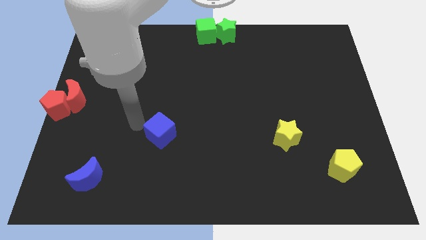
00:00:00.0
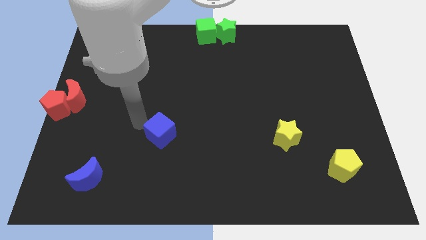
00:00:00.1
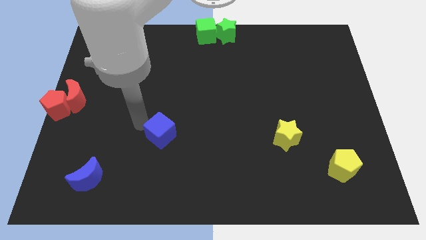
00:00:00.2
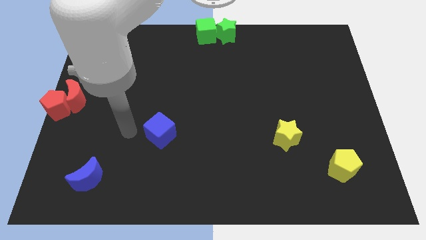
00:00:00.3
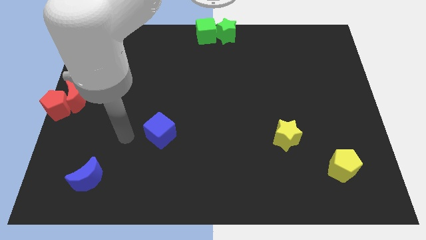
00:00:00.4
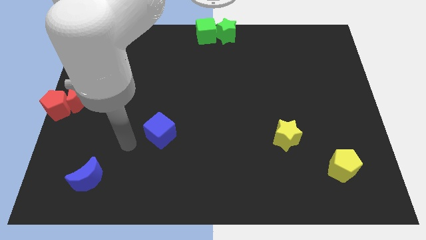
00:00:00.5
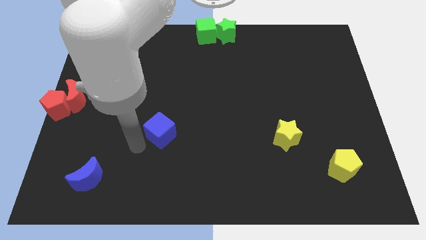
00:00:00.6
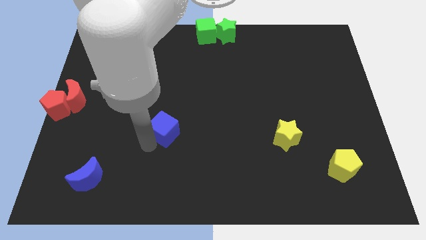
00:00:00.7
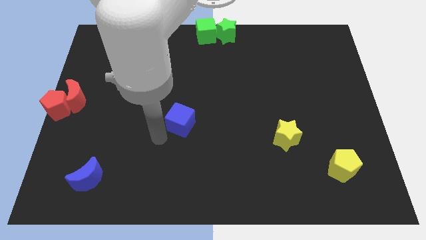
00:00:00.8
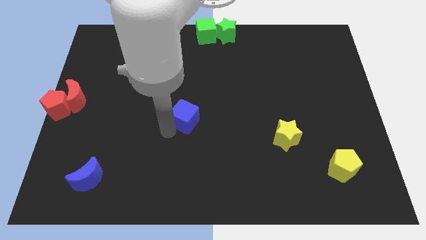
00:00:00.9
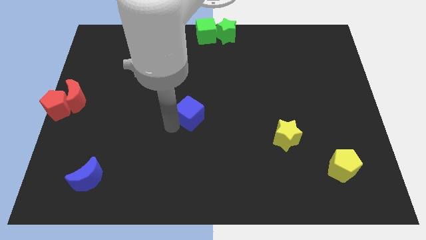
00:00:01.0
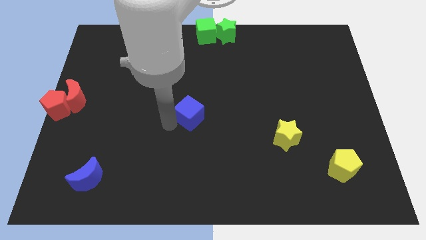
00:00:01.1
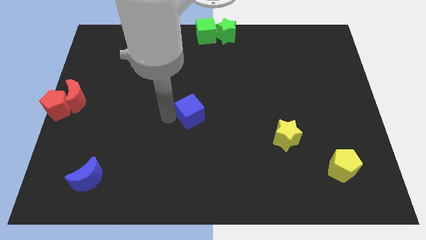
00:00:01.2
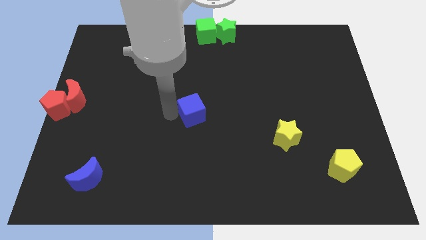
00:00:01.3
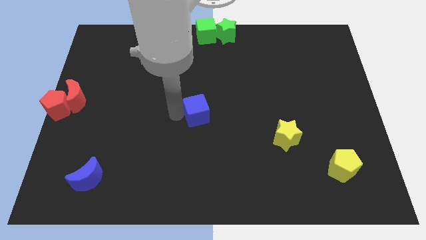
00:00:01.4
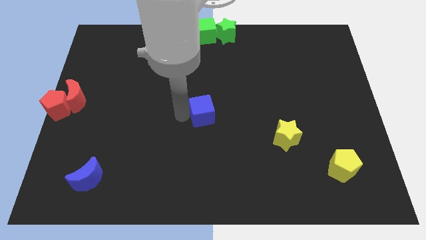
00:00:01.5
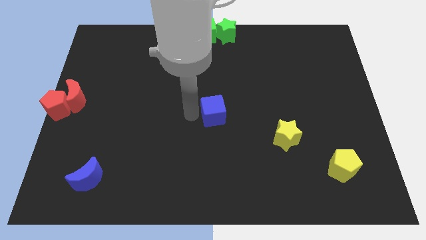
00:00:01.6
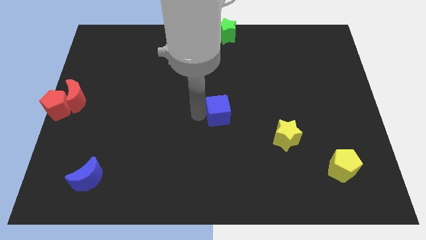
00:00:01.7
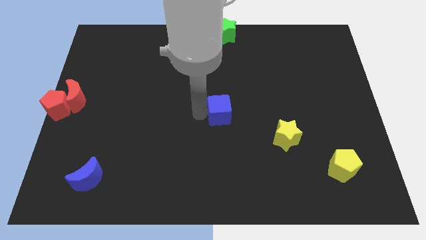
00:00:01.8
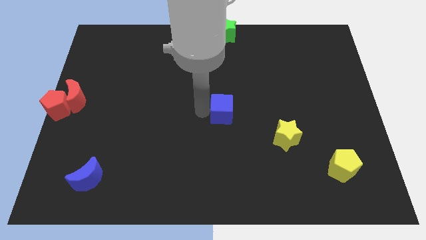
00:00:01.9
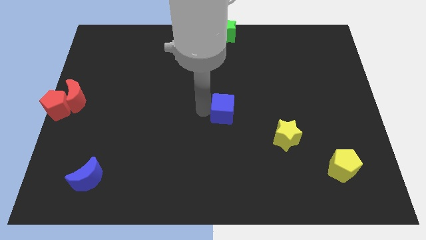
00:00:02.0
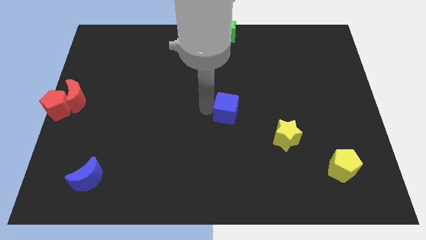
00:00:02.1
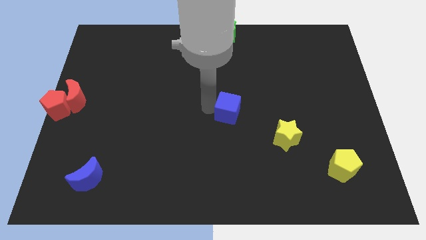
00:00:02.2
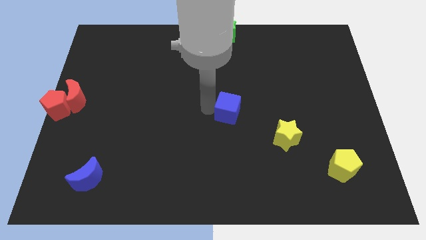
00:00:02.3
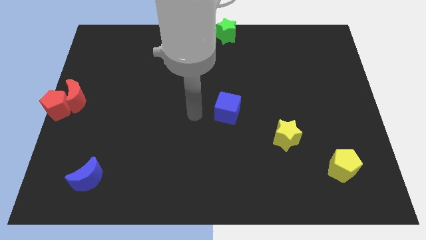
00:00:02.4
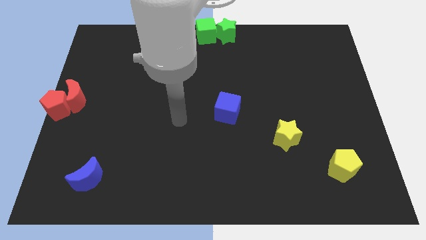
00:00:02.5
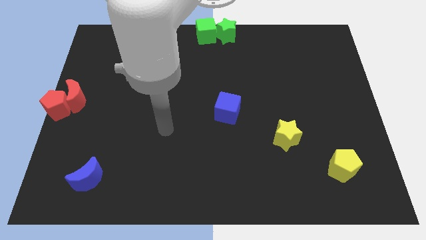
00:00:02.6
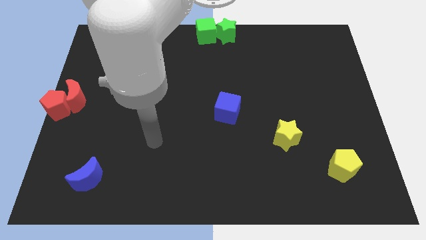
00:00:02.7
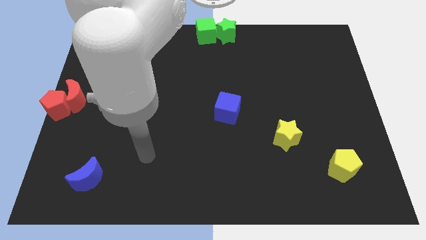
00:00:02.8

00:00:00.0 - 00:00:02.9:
move the blue cube diagonally top left to the yellow star

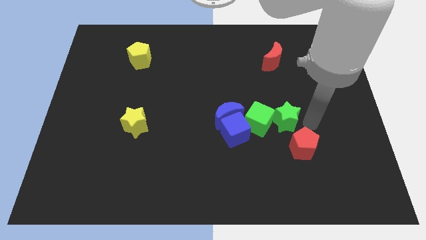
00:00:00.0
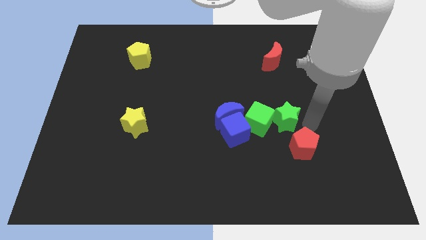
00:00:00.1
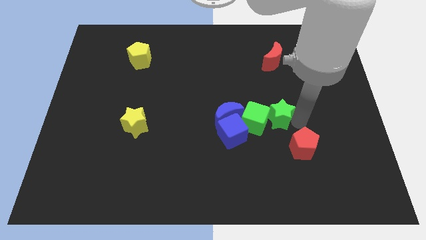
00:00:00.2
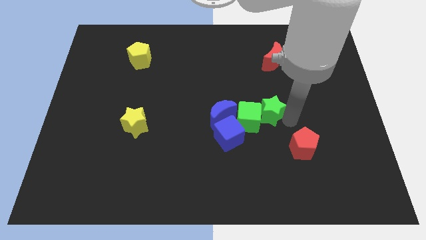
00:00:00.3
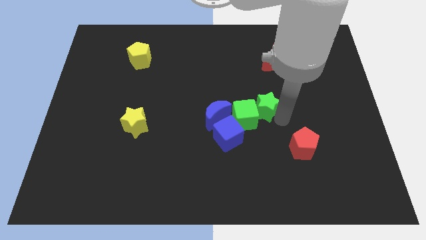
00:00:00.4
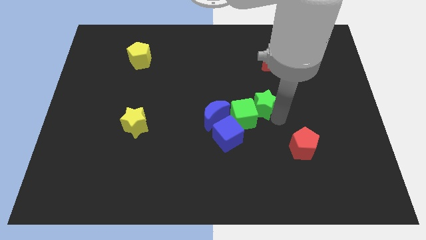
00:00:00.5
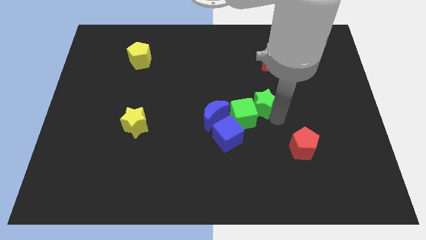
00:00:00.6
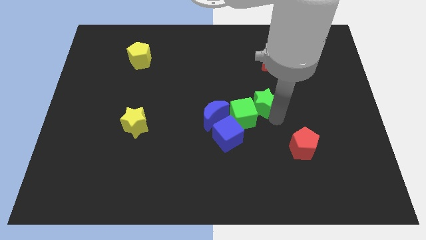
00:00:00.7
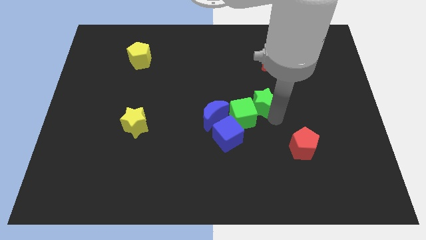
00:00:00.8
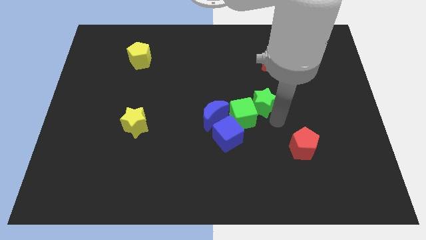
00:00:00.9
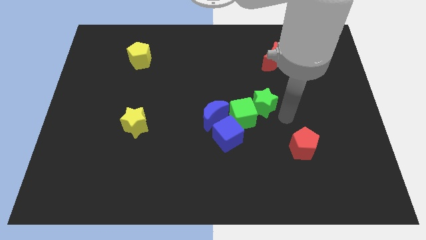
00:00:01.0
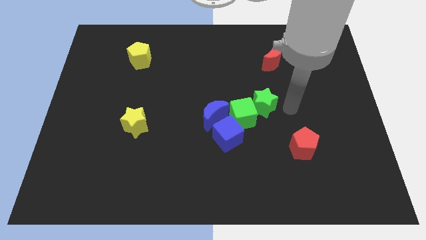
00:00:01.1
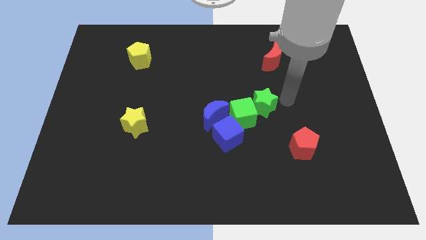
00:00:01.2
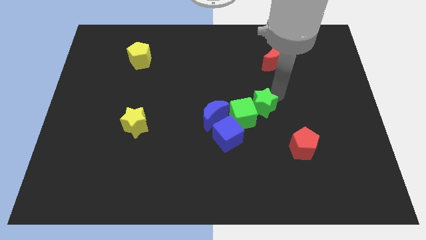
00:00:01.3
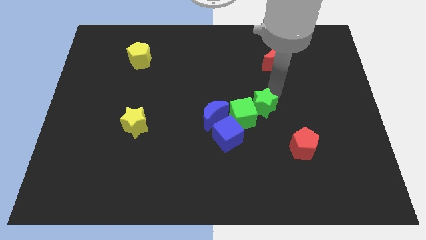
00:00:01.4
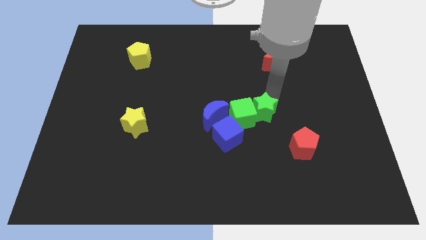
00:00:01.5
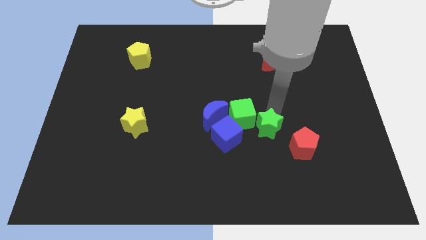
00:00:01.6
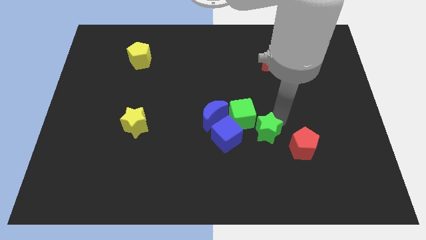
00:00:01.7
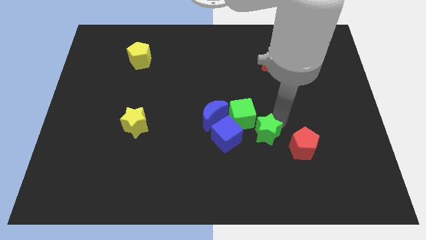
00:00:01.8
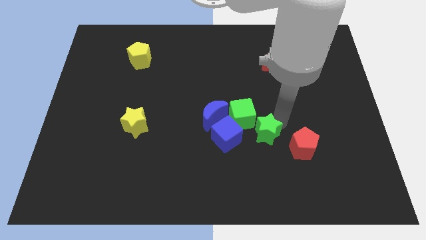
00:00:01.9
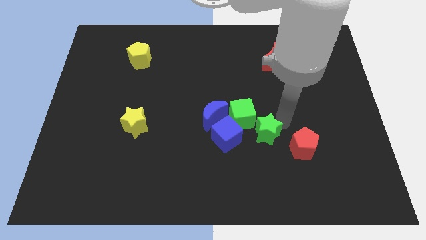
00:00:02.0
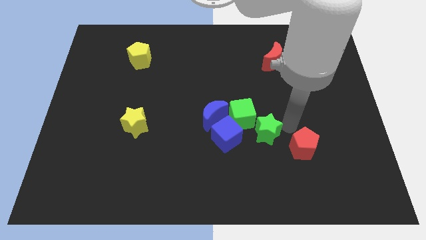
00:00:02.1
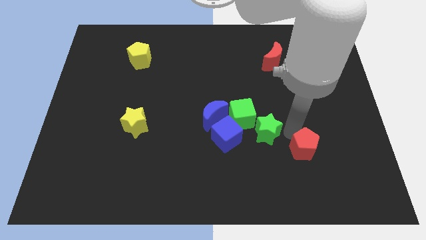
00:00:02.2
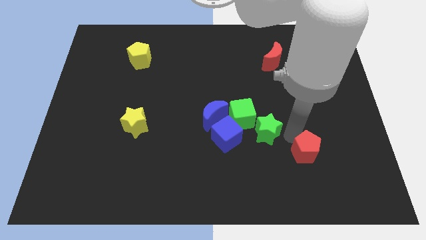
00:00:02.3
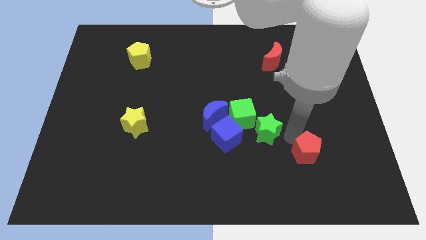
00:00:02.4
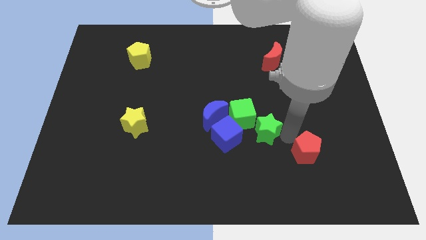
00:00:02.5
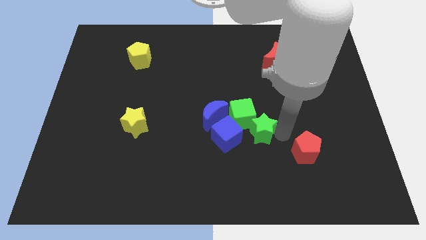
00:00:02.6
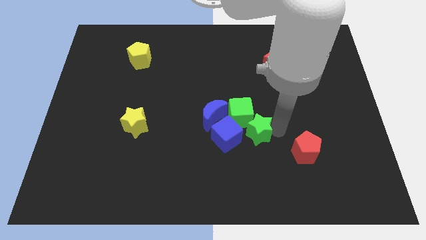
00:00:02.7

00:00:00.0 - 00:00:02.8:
slightly touch down the red pentagon

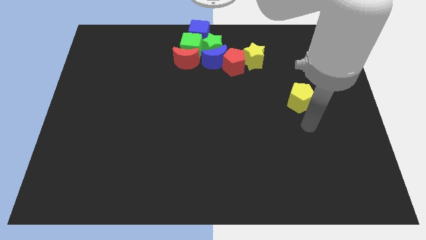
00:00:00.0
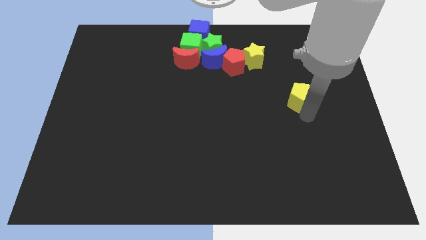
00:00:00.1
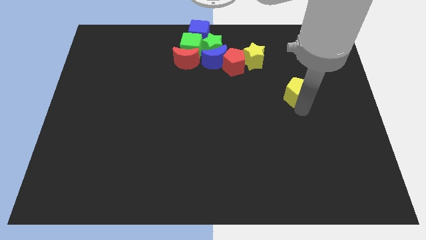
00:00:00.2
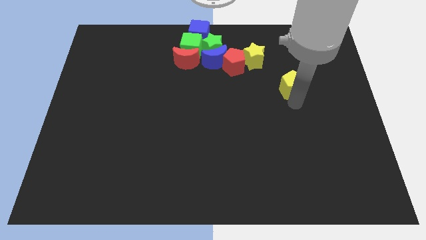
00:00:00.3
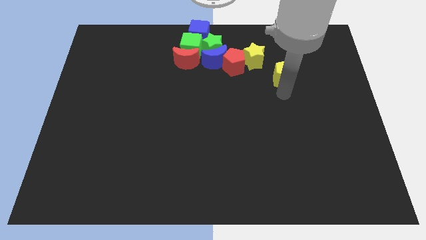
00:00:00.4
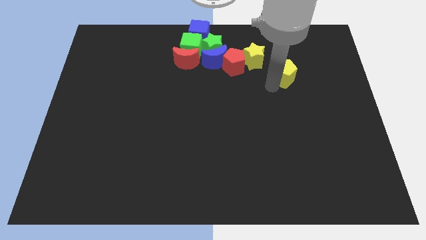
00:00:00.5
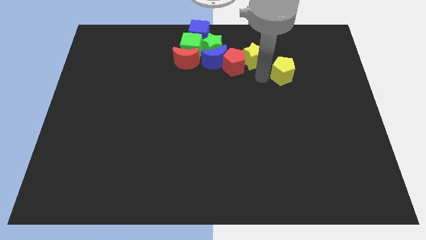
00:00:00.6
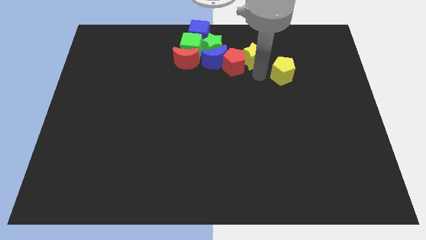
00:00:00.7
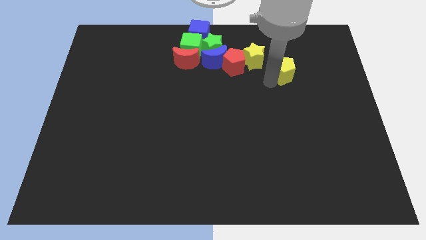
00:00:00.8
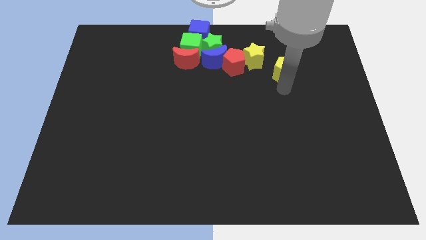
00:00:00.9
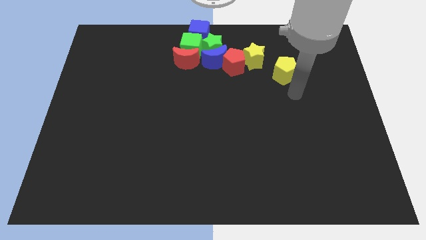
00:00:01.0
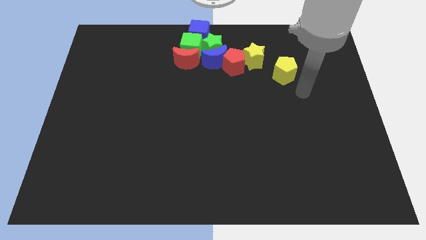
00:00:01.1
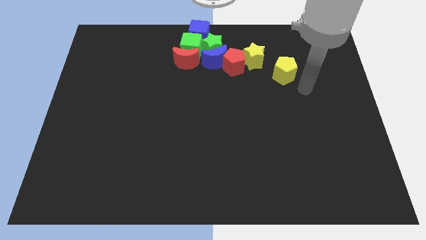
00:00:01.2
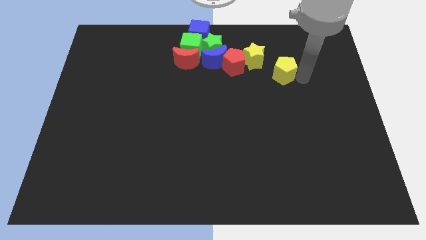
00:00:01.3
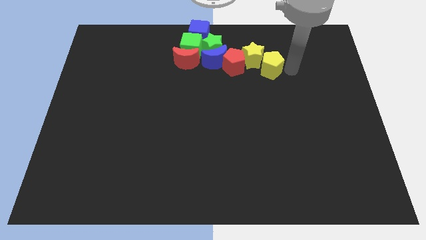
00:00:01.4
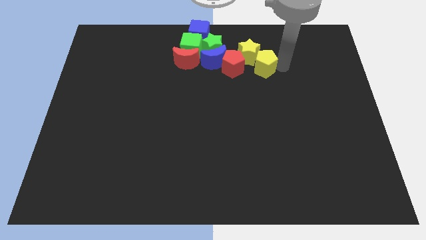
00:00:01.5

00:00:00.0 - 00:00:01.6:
move the yellow pentagon to the right of the red pentagon

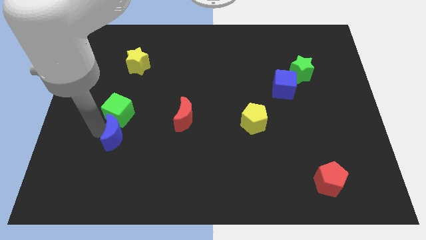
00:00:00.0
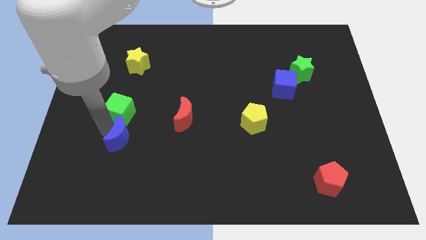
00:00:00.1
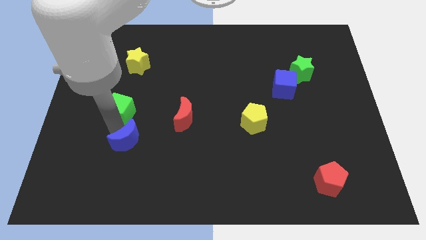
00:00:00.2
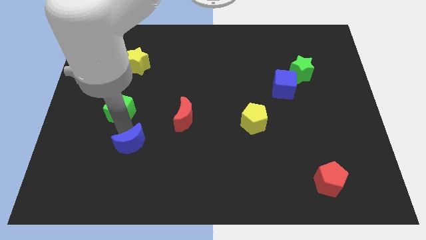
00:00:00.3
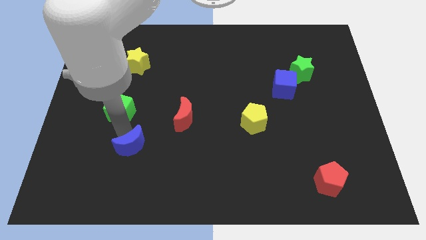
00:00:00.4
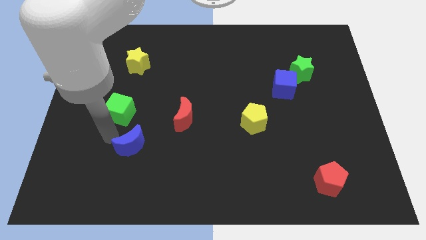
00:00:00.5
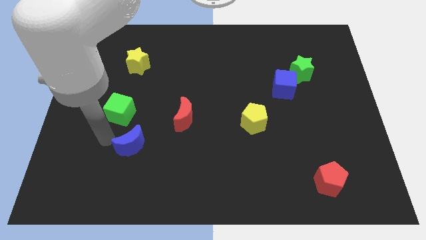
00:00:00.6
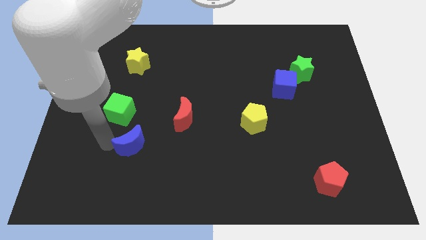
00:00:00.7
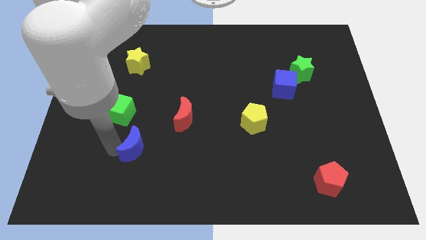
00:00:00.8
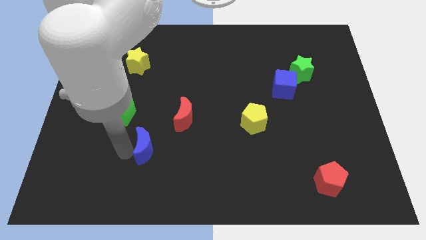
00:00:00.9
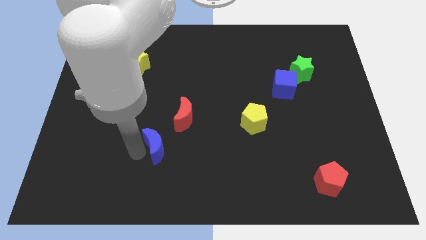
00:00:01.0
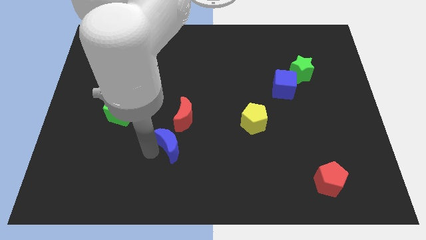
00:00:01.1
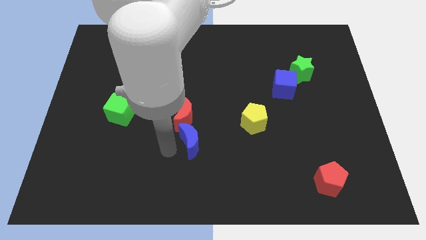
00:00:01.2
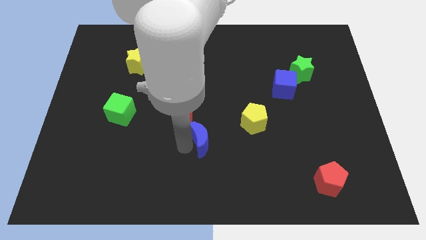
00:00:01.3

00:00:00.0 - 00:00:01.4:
separate the blue moon from green cube

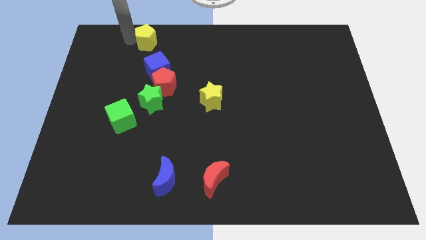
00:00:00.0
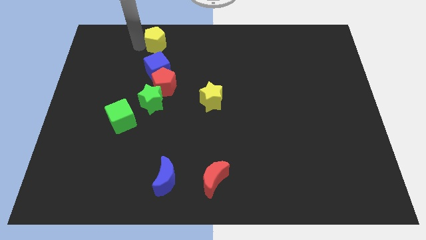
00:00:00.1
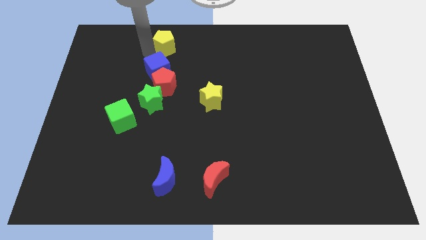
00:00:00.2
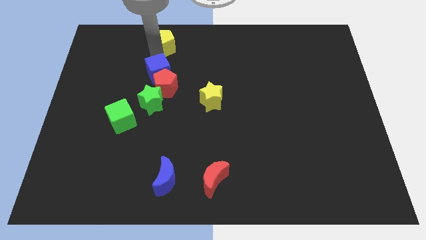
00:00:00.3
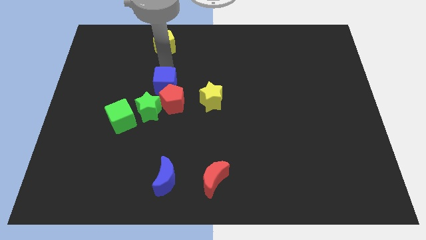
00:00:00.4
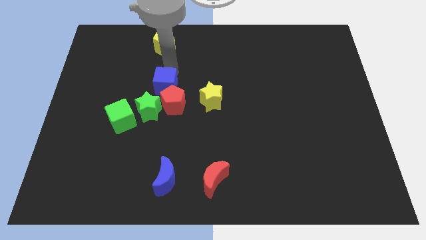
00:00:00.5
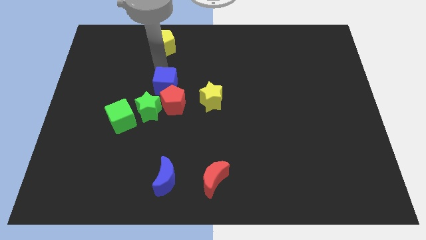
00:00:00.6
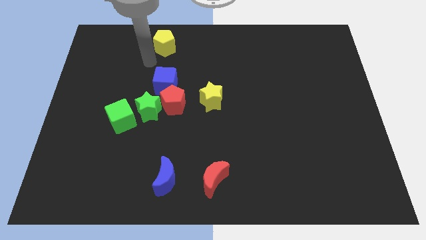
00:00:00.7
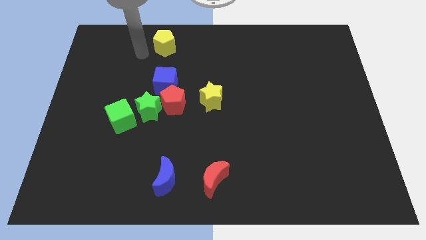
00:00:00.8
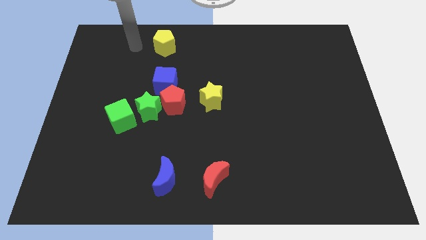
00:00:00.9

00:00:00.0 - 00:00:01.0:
push the blue cube into the red pentagon
